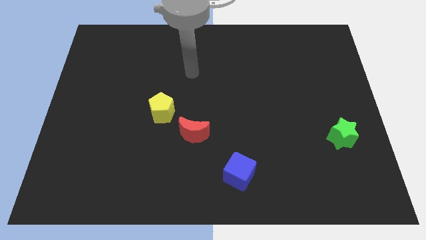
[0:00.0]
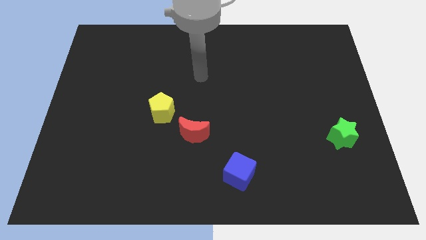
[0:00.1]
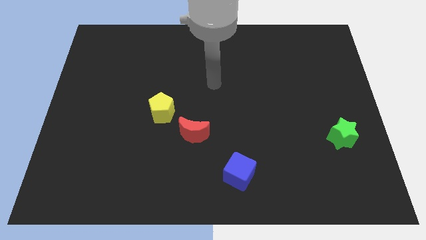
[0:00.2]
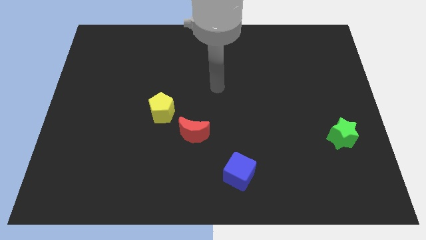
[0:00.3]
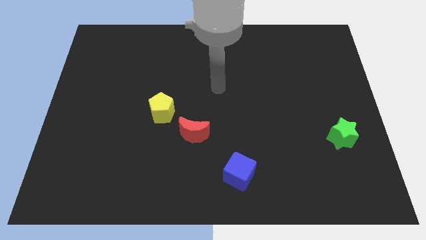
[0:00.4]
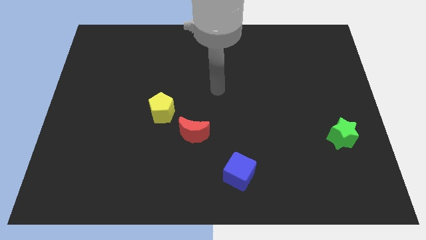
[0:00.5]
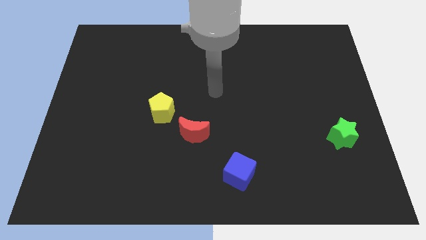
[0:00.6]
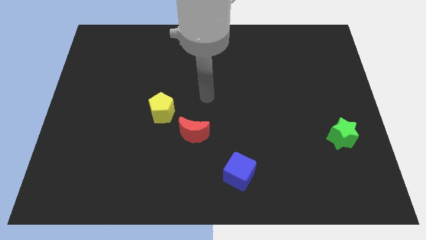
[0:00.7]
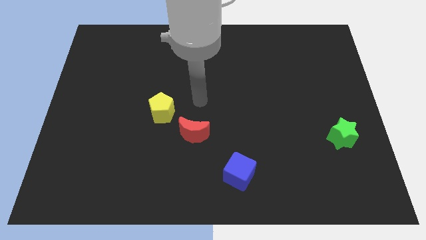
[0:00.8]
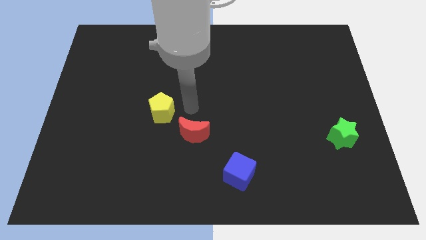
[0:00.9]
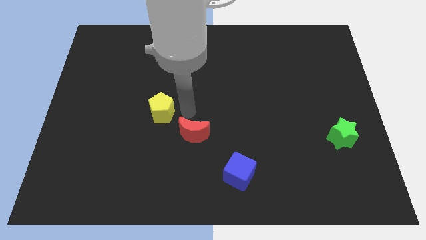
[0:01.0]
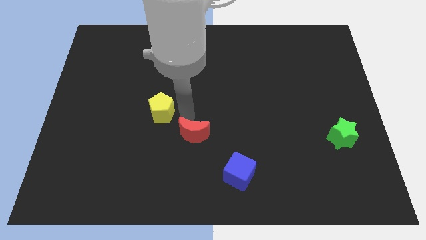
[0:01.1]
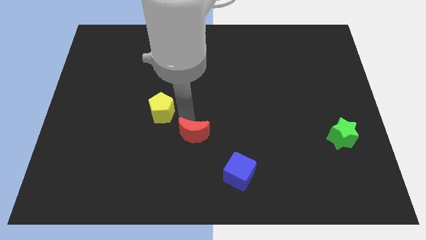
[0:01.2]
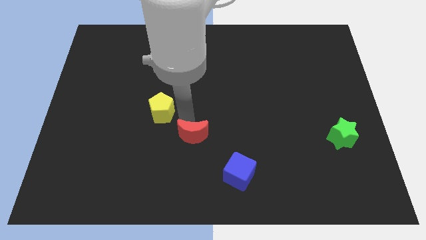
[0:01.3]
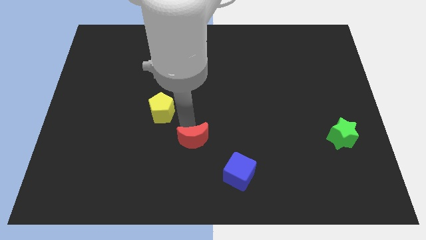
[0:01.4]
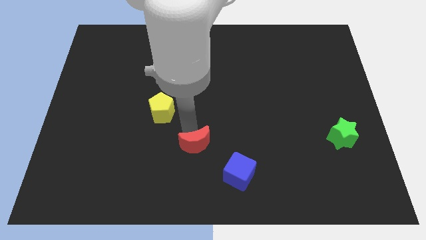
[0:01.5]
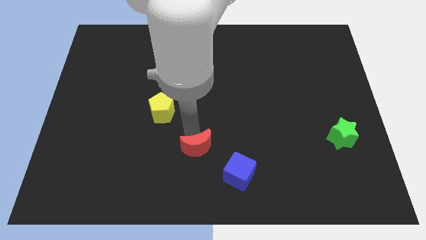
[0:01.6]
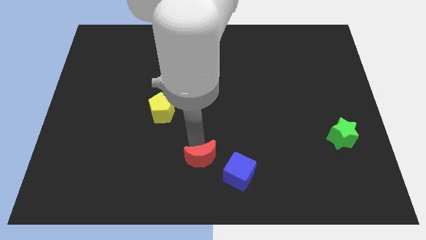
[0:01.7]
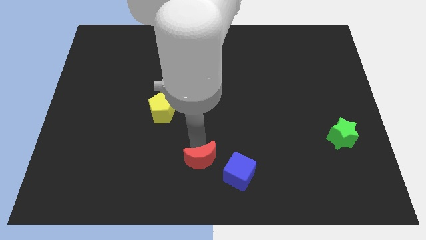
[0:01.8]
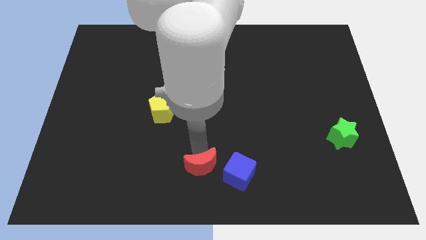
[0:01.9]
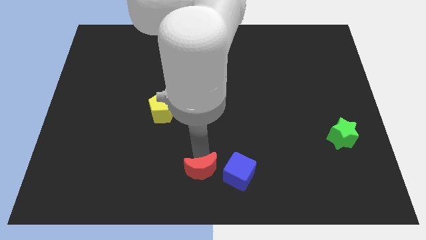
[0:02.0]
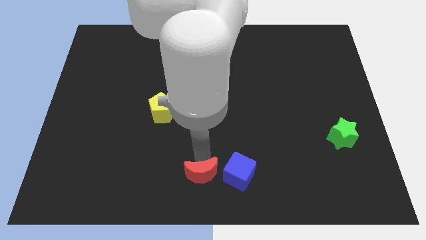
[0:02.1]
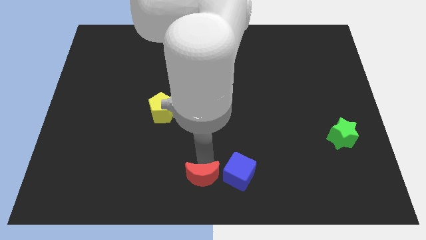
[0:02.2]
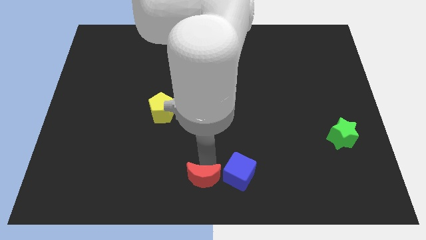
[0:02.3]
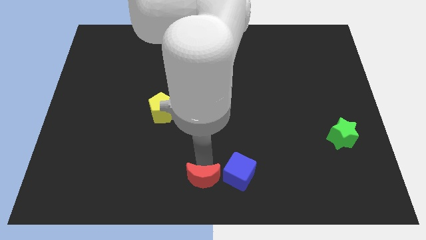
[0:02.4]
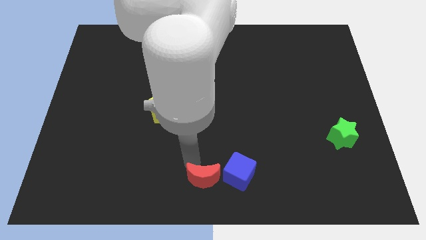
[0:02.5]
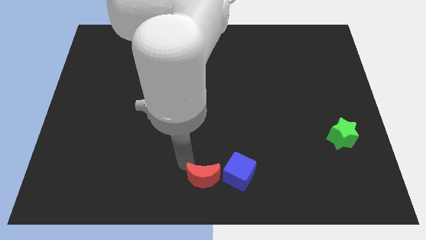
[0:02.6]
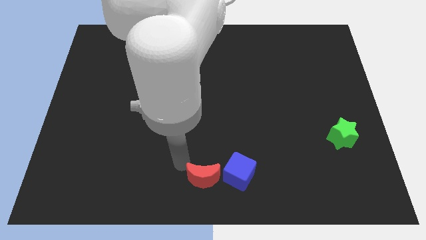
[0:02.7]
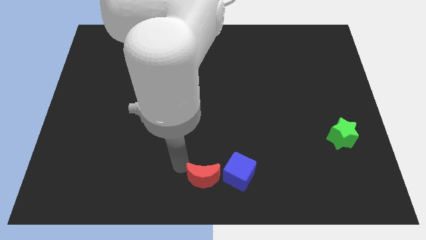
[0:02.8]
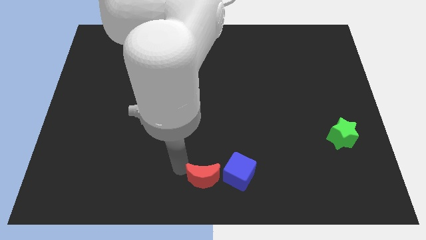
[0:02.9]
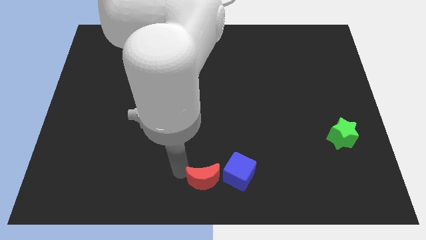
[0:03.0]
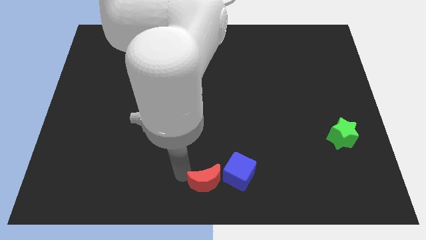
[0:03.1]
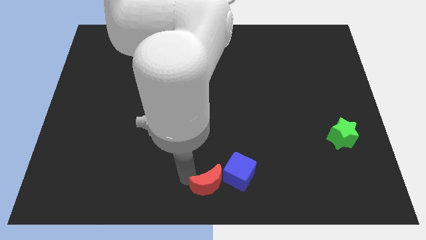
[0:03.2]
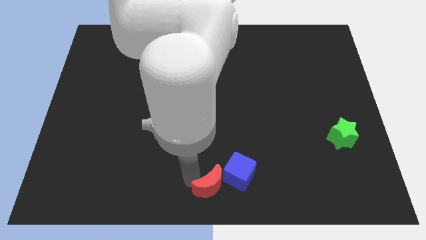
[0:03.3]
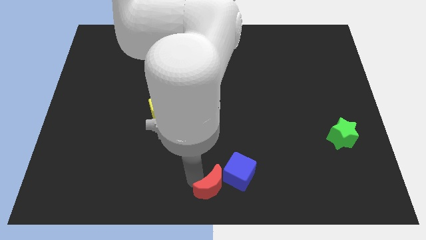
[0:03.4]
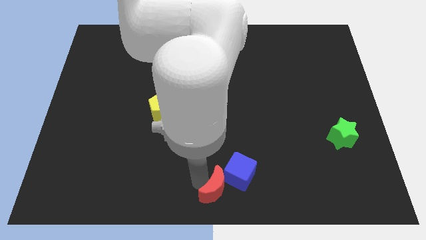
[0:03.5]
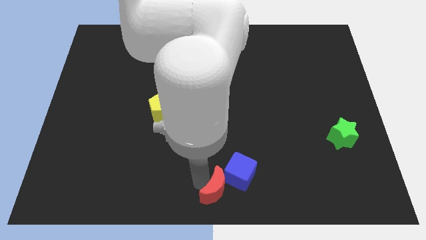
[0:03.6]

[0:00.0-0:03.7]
slide the red moon next to the cube

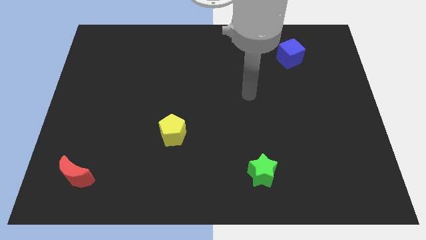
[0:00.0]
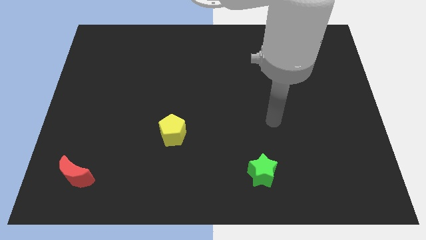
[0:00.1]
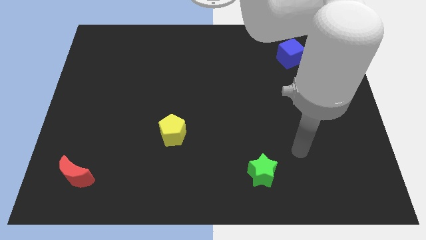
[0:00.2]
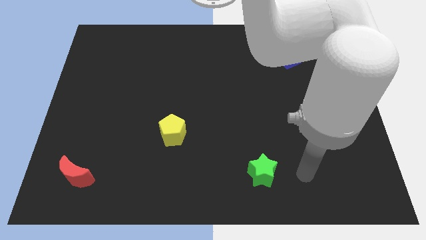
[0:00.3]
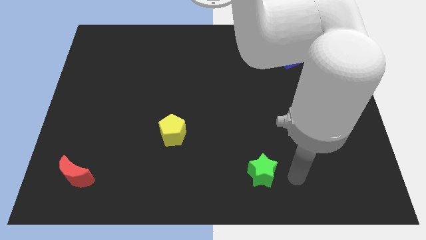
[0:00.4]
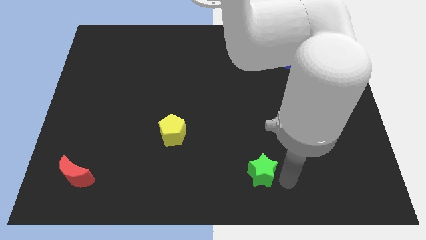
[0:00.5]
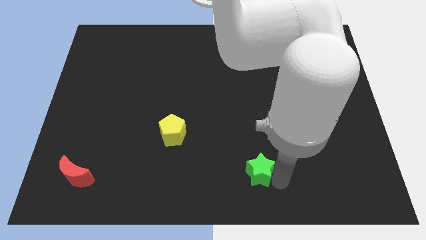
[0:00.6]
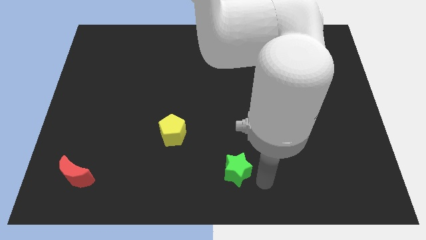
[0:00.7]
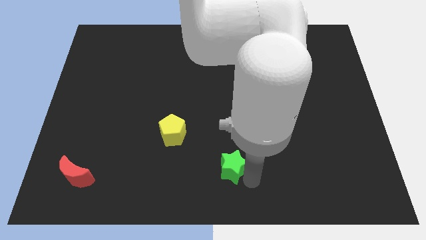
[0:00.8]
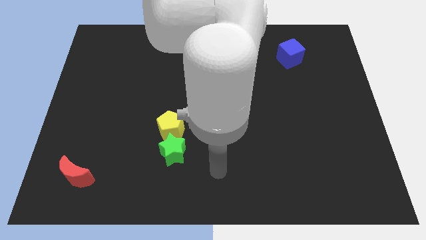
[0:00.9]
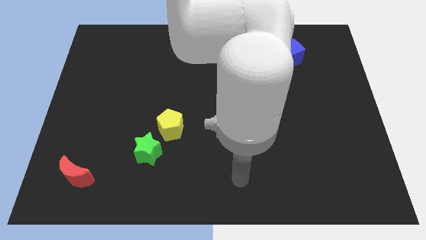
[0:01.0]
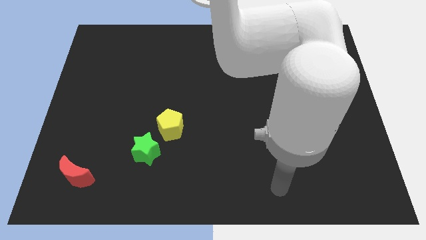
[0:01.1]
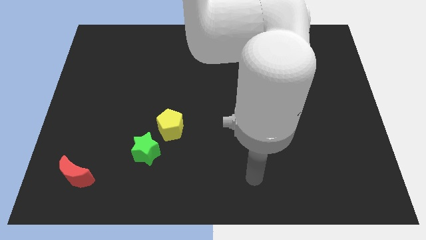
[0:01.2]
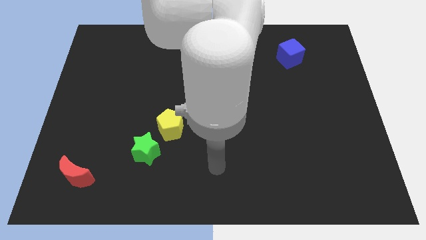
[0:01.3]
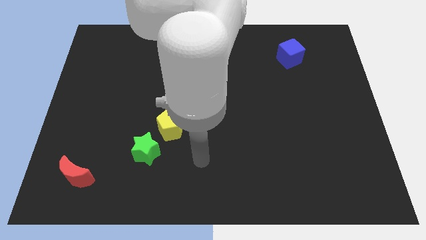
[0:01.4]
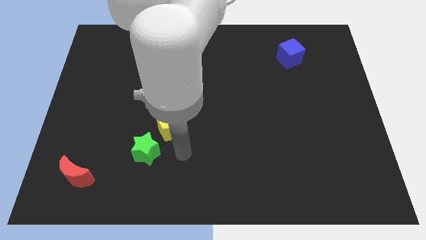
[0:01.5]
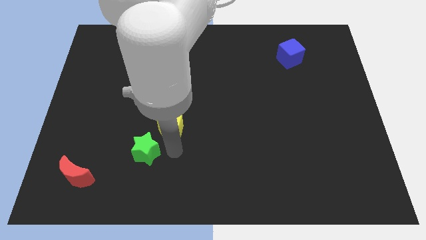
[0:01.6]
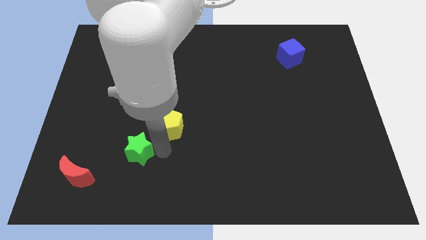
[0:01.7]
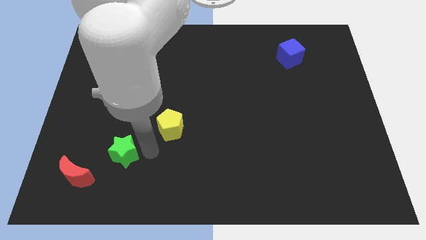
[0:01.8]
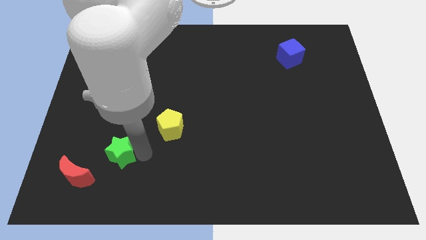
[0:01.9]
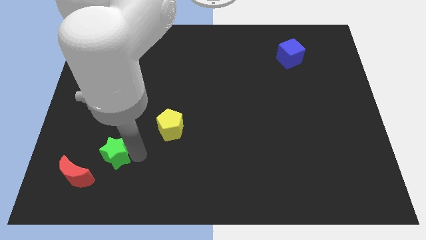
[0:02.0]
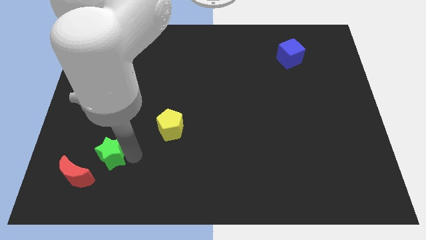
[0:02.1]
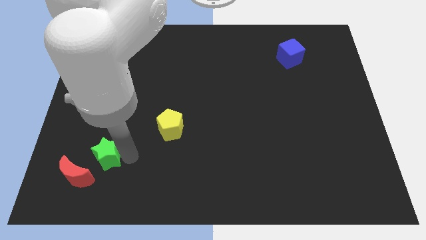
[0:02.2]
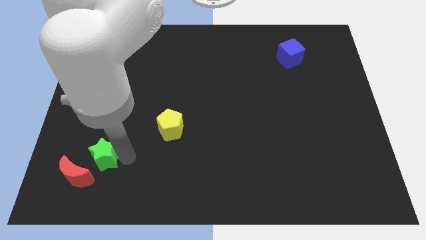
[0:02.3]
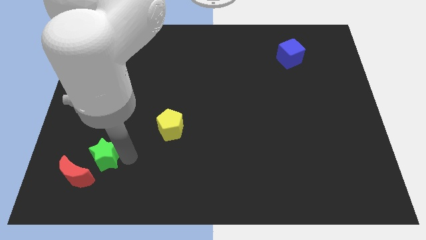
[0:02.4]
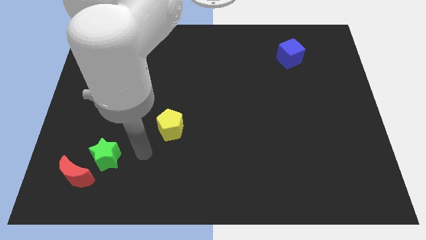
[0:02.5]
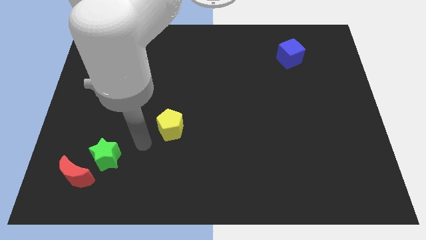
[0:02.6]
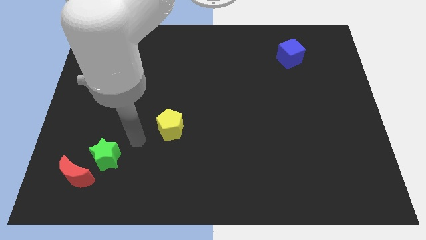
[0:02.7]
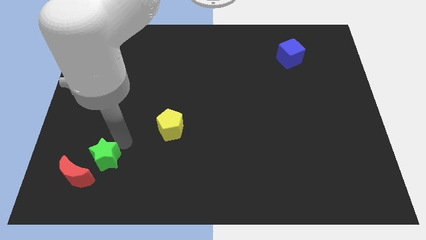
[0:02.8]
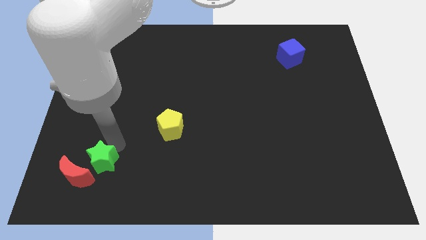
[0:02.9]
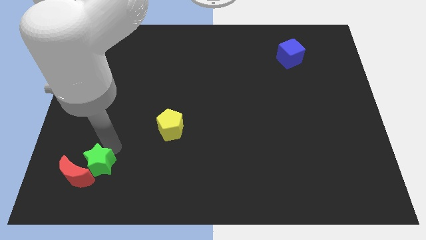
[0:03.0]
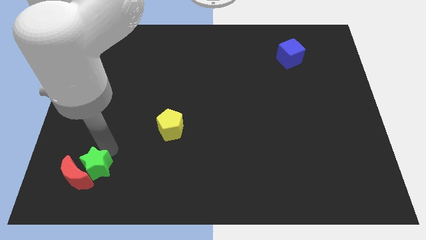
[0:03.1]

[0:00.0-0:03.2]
put the green star to the moon

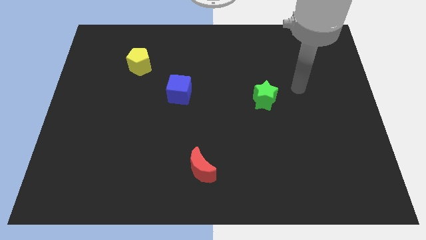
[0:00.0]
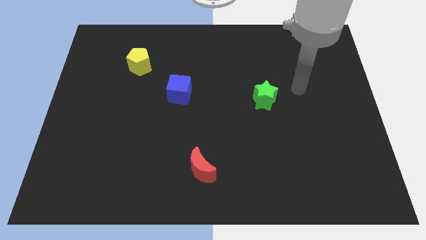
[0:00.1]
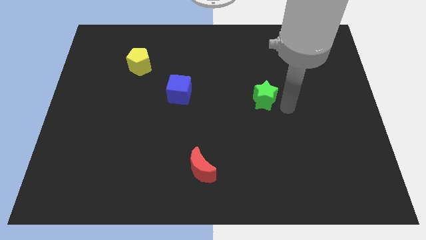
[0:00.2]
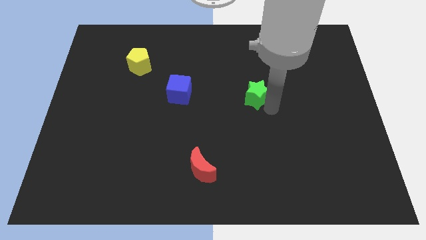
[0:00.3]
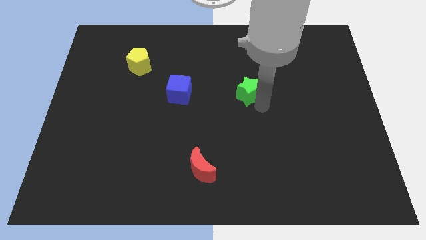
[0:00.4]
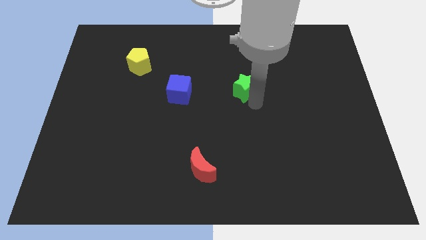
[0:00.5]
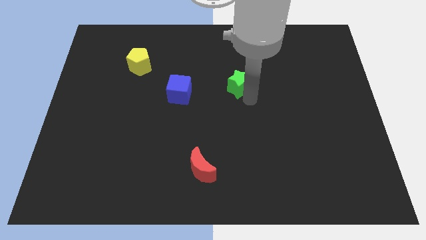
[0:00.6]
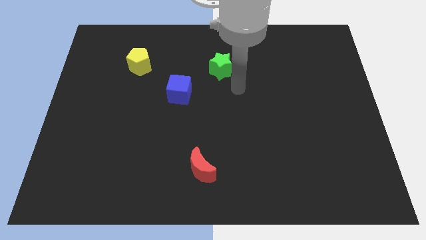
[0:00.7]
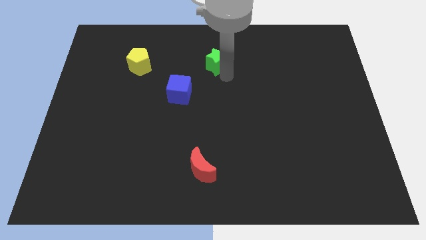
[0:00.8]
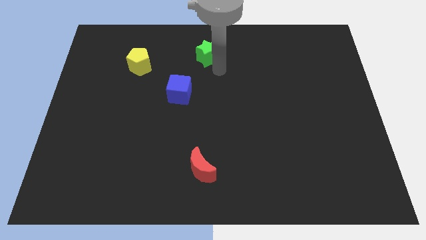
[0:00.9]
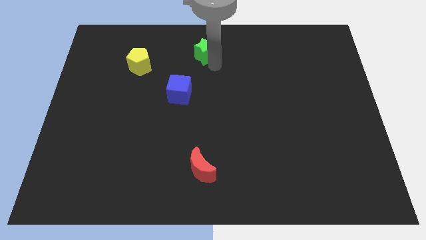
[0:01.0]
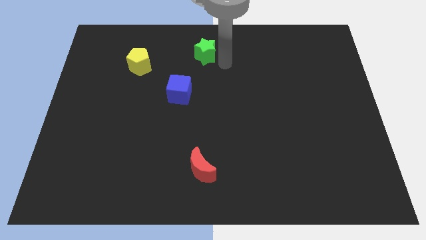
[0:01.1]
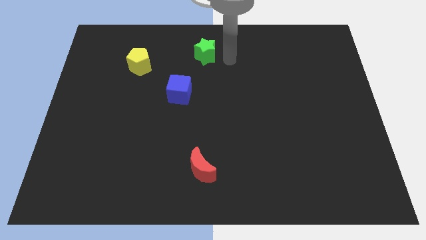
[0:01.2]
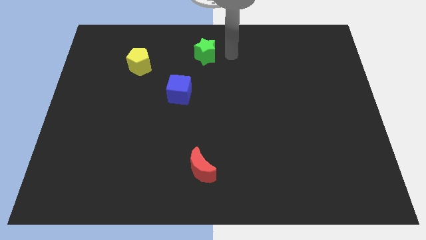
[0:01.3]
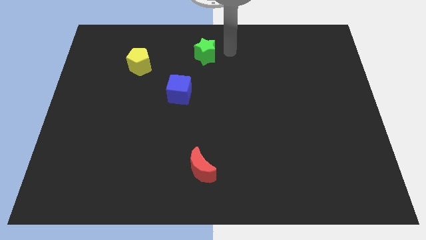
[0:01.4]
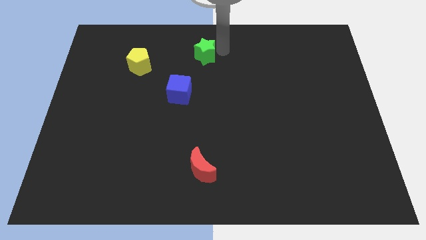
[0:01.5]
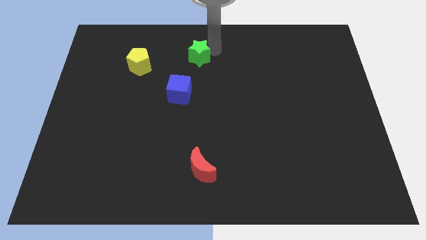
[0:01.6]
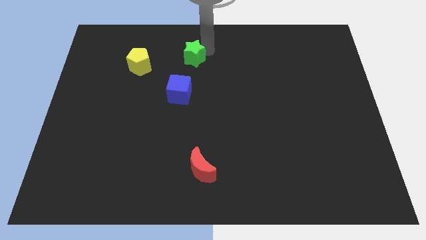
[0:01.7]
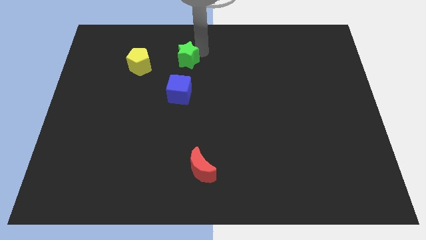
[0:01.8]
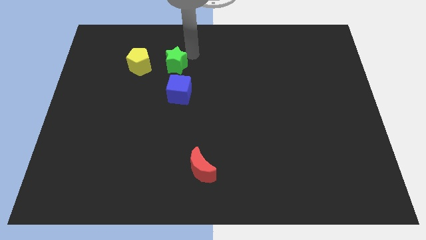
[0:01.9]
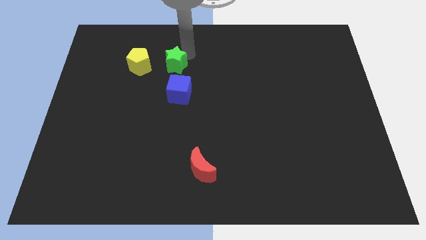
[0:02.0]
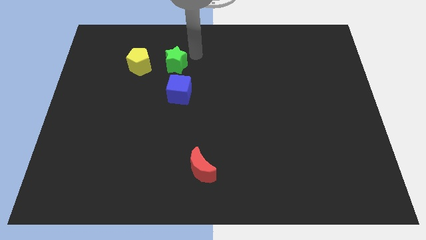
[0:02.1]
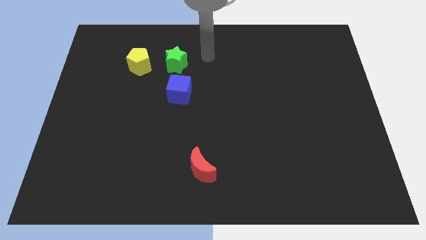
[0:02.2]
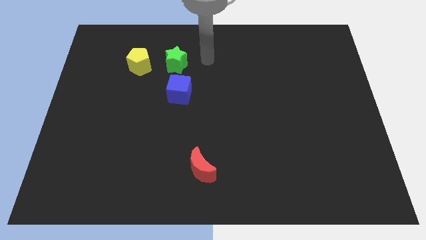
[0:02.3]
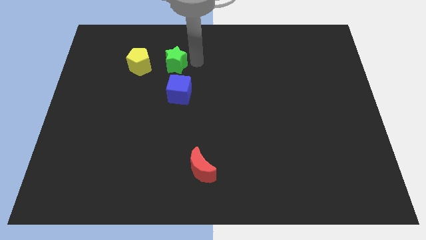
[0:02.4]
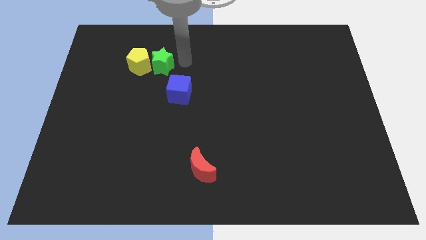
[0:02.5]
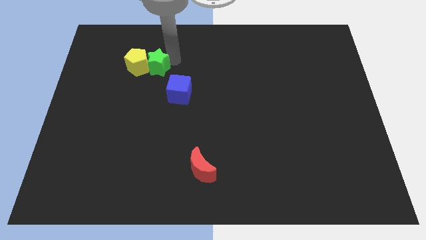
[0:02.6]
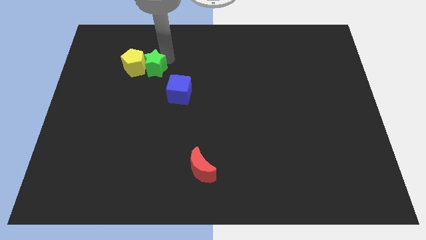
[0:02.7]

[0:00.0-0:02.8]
slide the green star to the yellow pentagon
